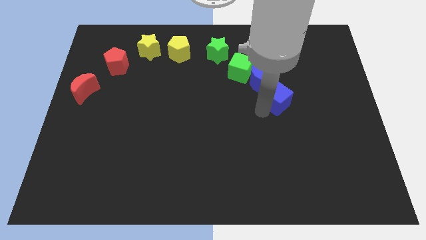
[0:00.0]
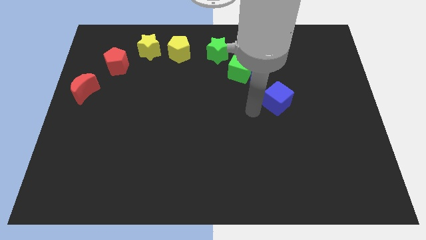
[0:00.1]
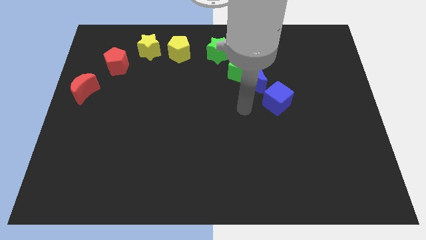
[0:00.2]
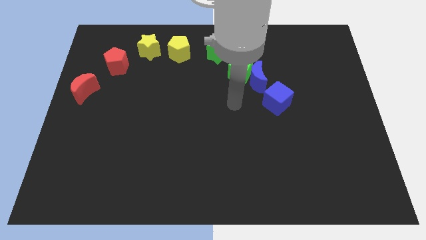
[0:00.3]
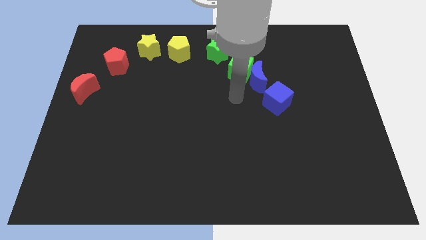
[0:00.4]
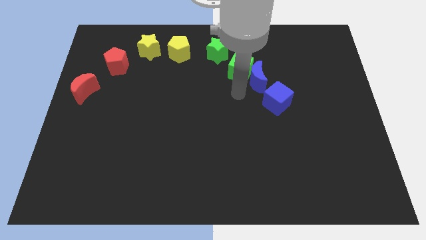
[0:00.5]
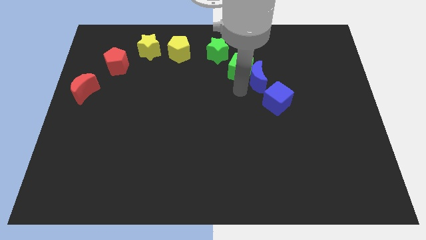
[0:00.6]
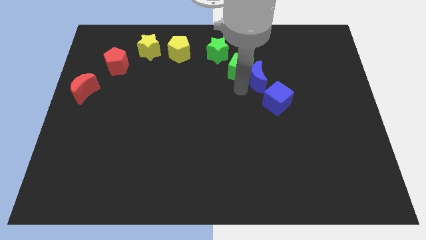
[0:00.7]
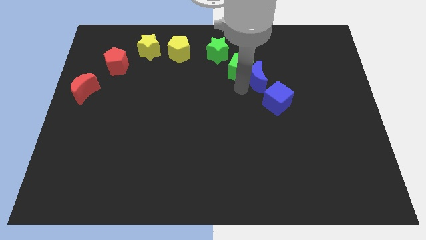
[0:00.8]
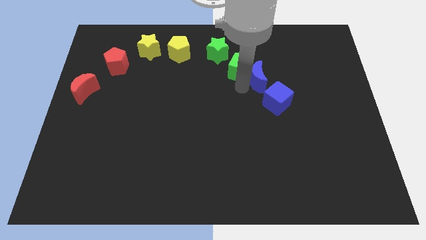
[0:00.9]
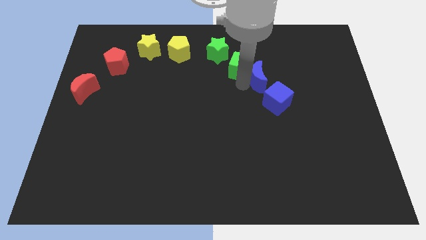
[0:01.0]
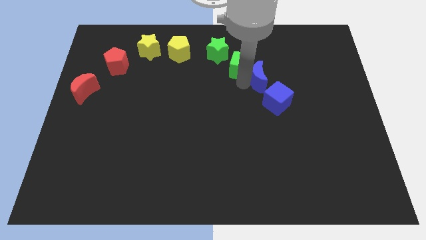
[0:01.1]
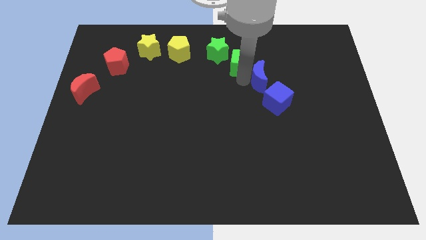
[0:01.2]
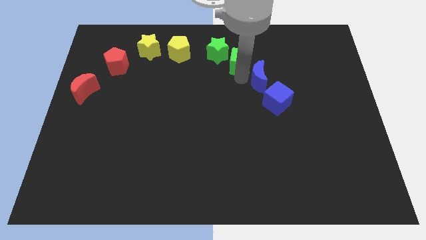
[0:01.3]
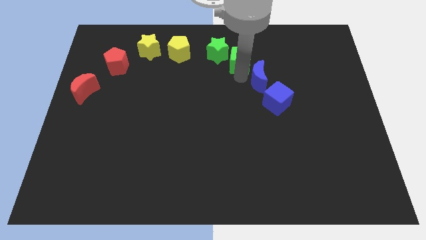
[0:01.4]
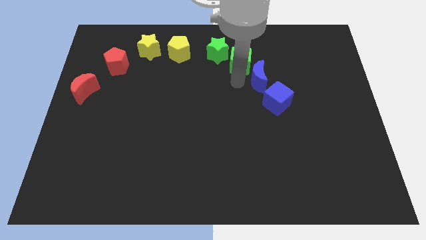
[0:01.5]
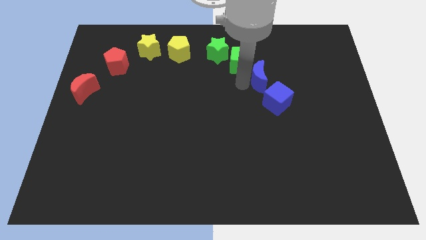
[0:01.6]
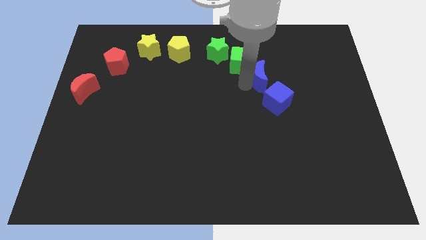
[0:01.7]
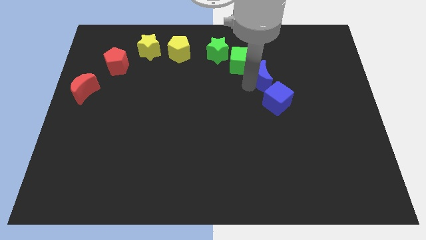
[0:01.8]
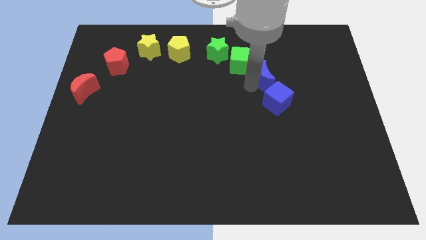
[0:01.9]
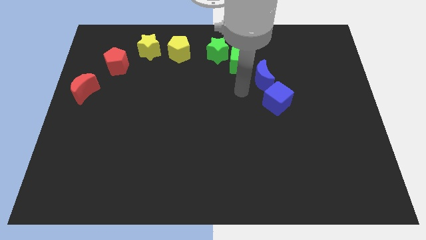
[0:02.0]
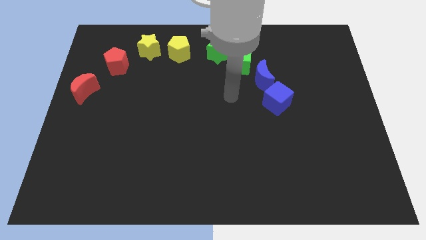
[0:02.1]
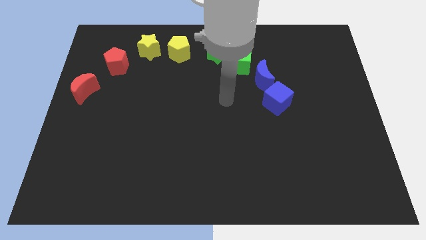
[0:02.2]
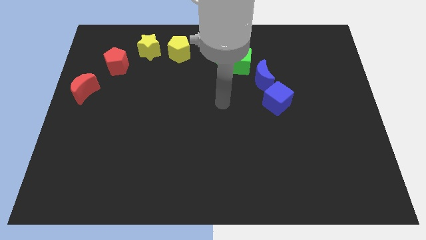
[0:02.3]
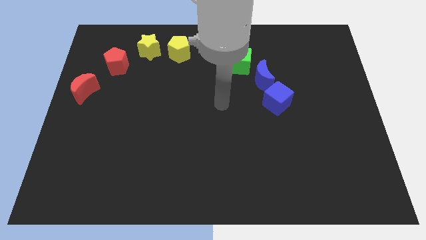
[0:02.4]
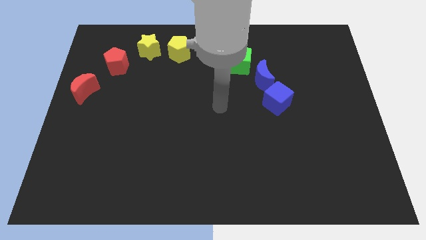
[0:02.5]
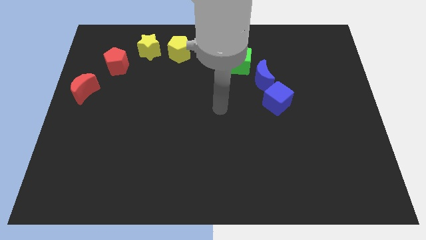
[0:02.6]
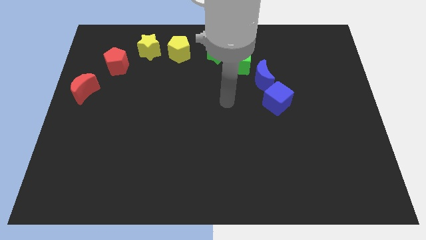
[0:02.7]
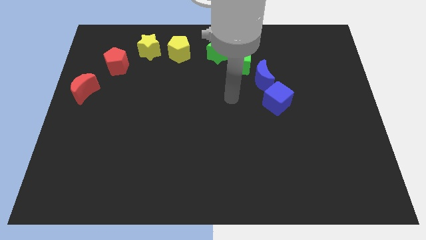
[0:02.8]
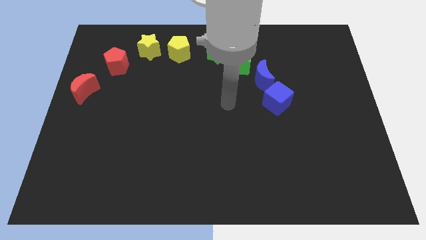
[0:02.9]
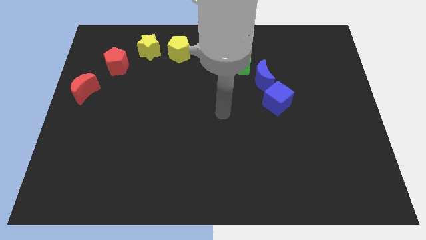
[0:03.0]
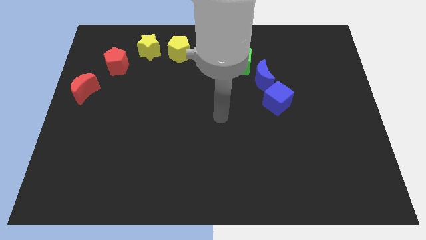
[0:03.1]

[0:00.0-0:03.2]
adjust green cube diagonally in between the green star and blue crescent

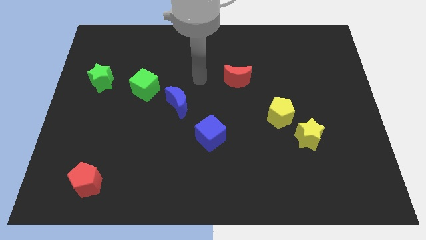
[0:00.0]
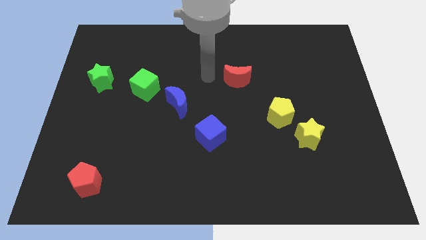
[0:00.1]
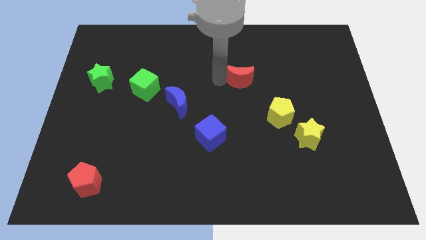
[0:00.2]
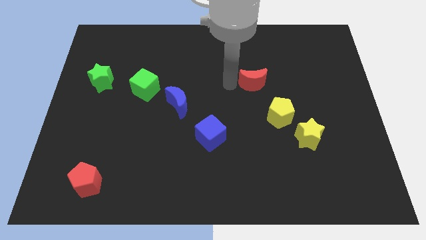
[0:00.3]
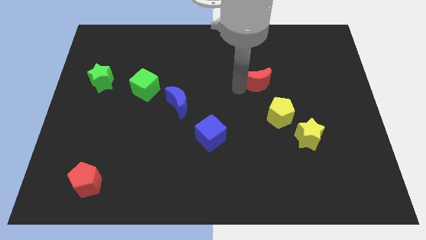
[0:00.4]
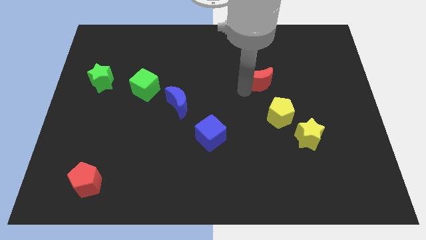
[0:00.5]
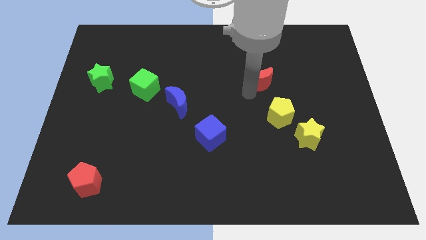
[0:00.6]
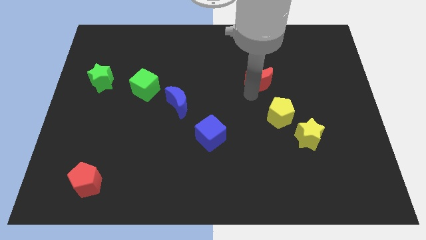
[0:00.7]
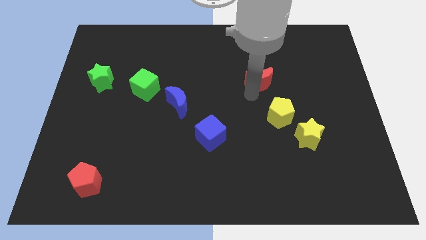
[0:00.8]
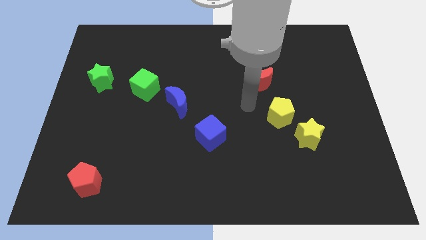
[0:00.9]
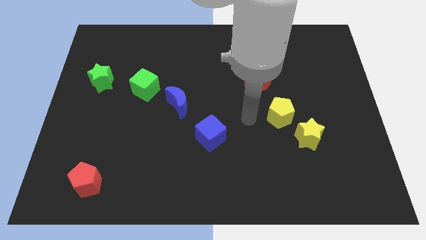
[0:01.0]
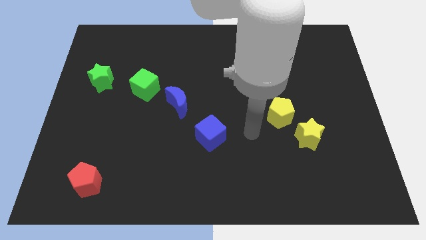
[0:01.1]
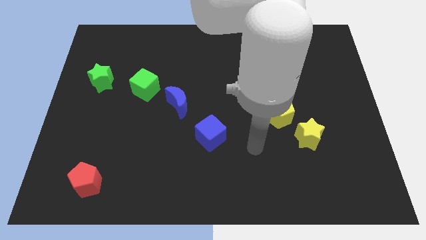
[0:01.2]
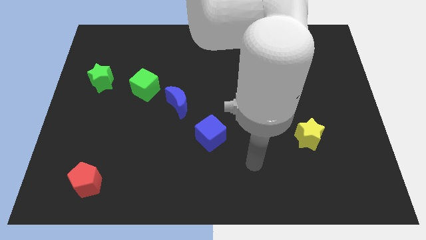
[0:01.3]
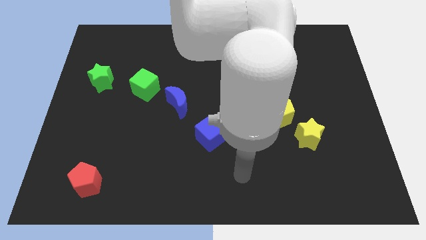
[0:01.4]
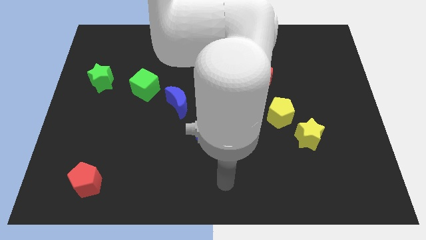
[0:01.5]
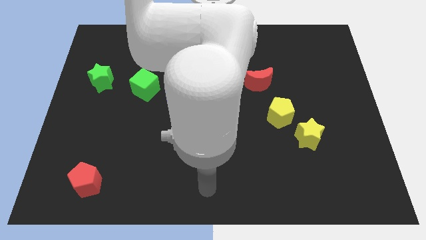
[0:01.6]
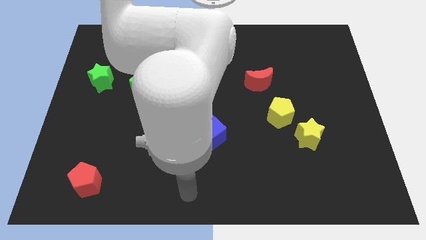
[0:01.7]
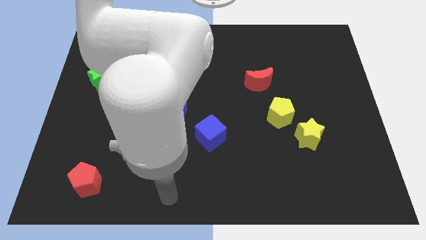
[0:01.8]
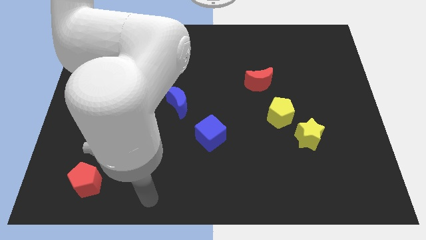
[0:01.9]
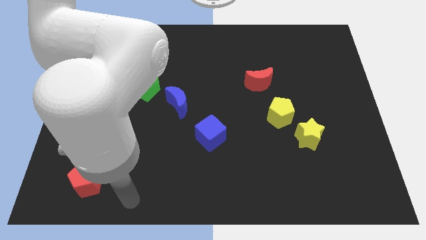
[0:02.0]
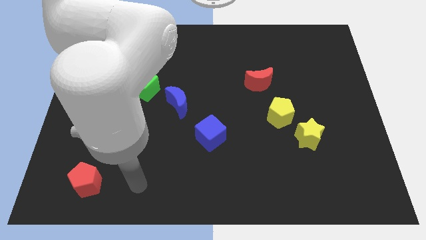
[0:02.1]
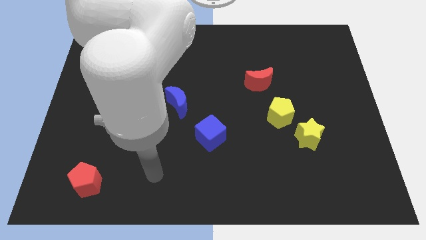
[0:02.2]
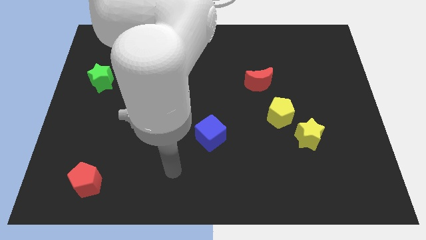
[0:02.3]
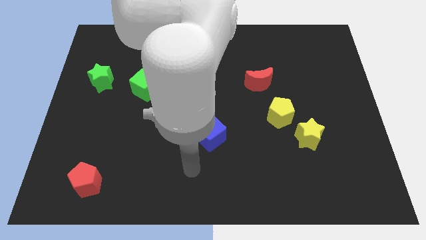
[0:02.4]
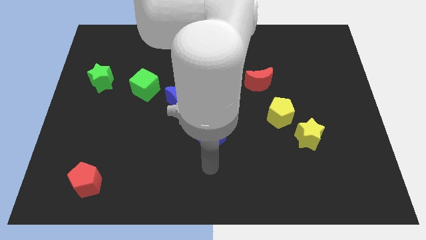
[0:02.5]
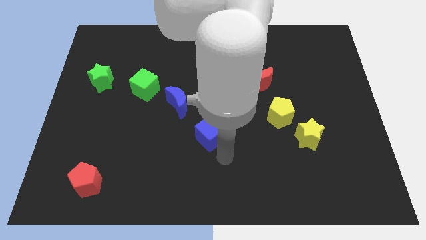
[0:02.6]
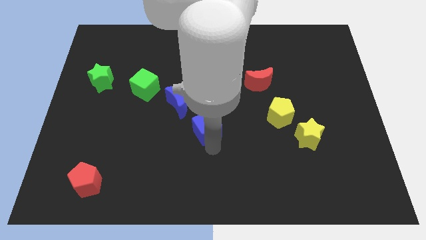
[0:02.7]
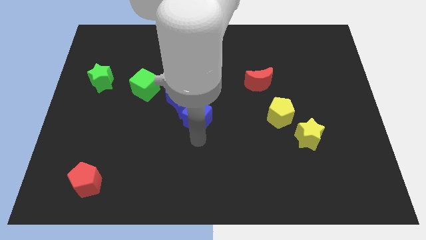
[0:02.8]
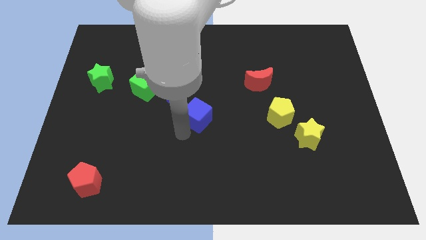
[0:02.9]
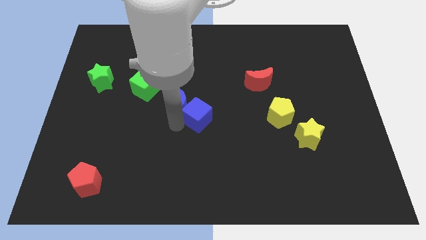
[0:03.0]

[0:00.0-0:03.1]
push blue cube towards blue crescent

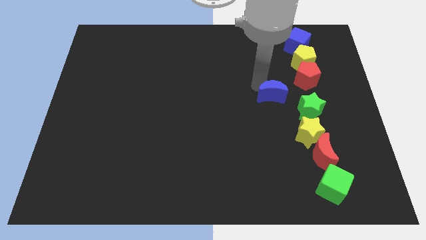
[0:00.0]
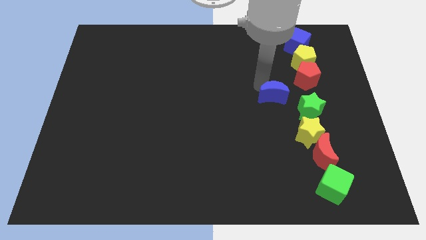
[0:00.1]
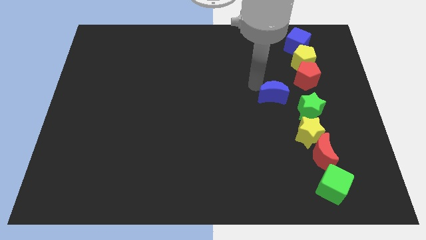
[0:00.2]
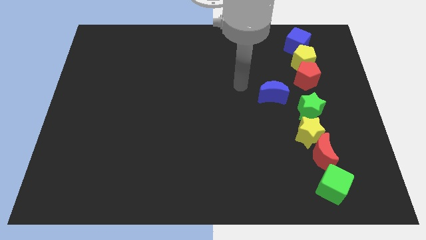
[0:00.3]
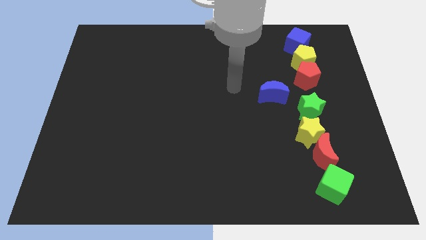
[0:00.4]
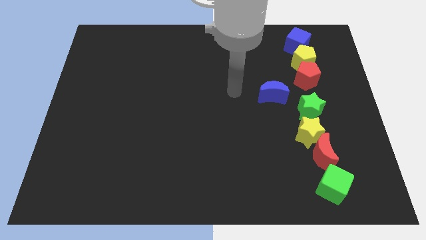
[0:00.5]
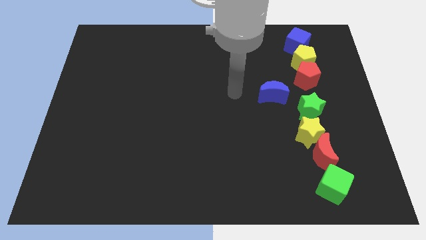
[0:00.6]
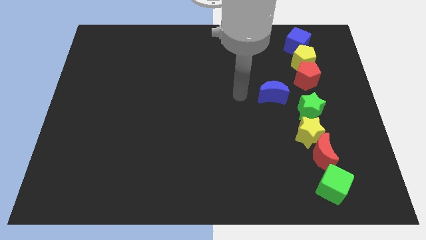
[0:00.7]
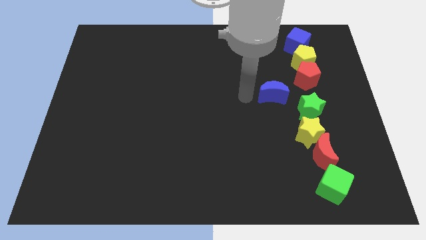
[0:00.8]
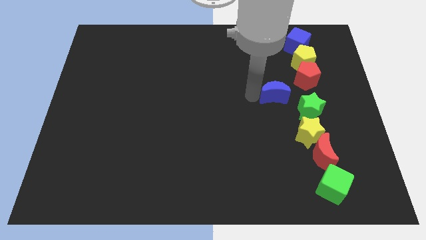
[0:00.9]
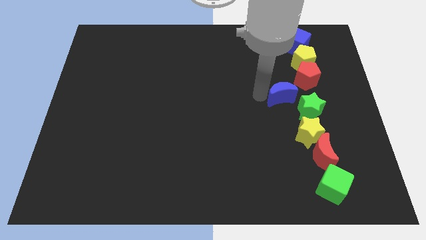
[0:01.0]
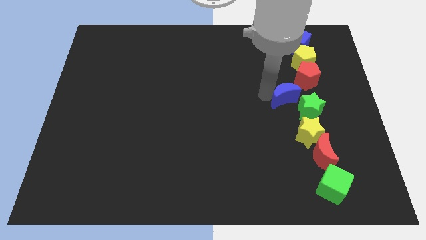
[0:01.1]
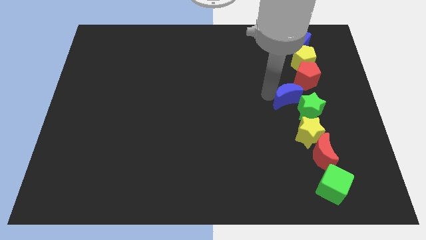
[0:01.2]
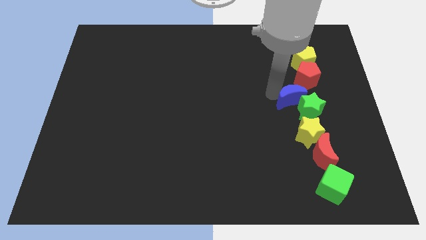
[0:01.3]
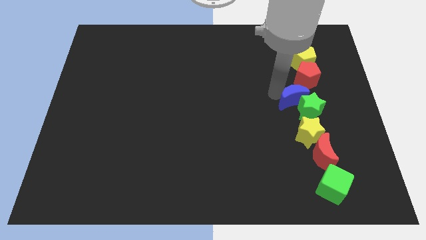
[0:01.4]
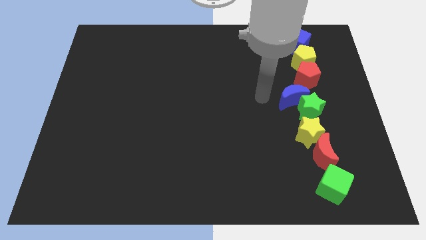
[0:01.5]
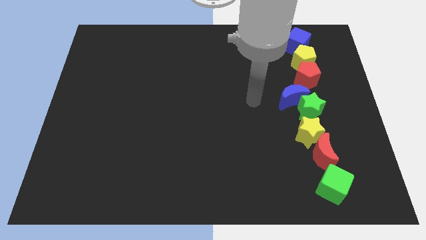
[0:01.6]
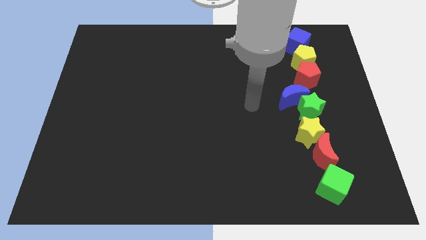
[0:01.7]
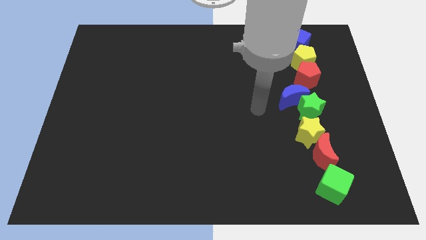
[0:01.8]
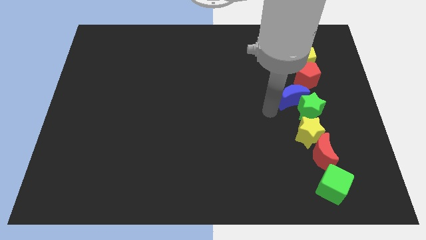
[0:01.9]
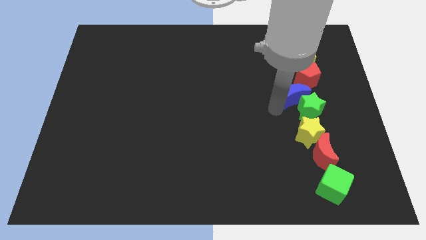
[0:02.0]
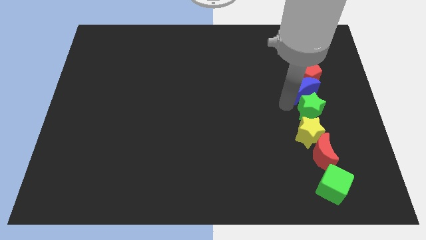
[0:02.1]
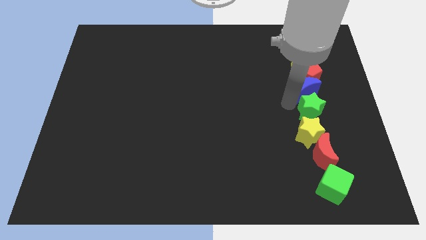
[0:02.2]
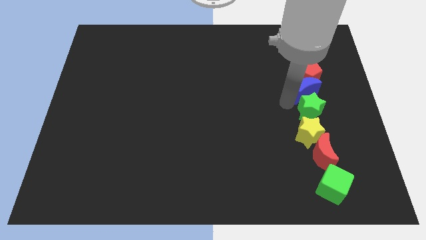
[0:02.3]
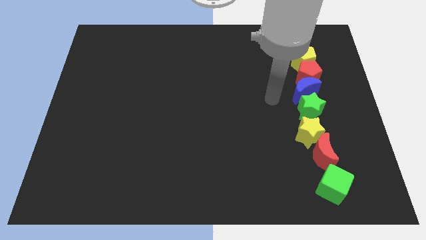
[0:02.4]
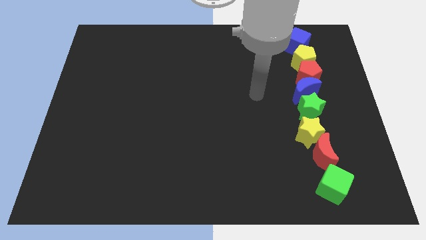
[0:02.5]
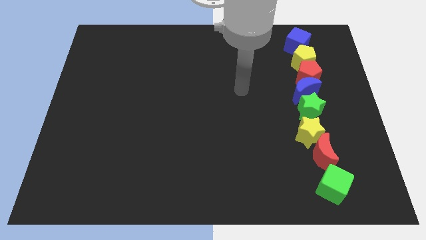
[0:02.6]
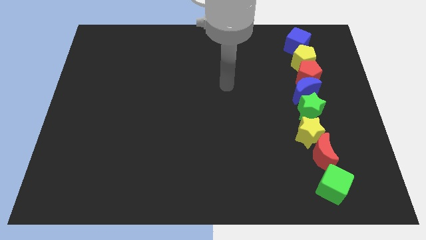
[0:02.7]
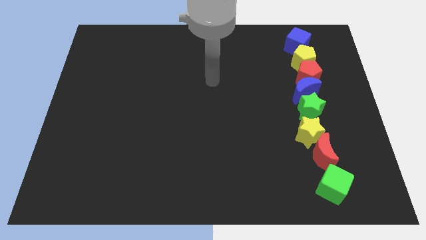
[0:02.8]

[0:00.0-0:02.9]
place the blue crescent on top of green star
